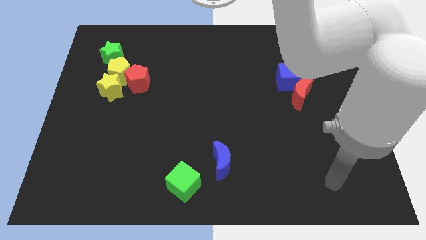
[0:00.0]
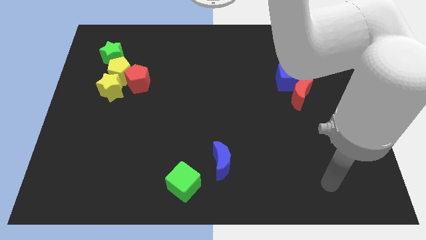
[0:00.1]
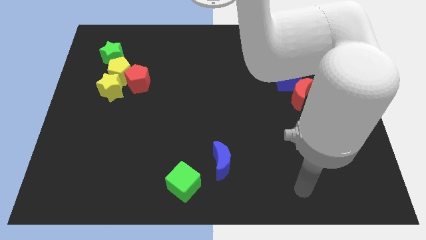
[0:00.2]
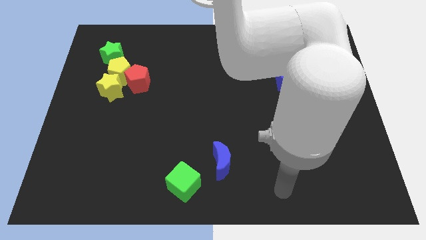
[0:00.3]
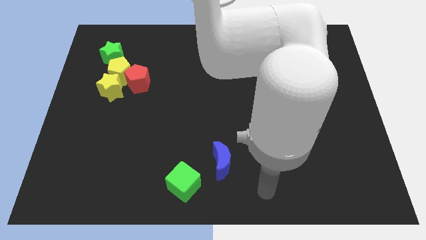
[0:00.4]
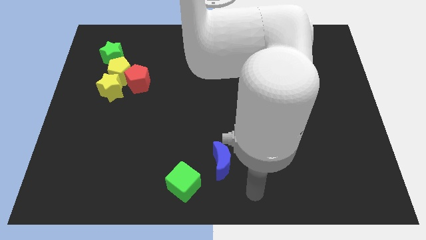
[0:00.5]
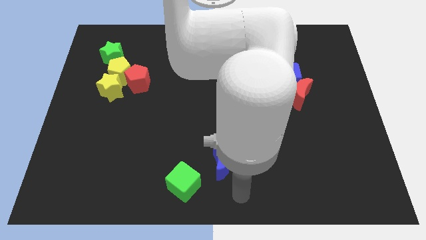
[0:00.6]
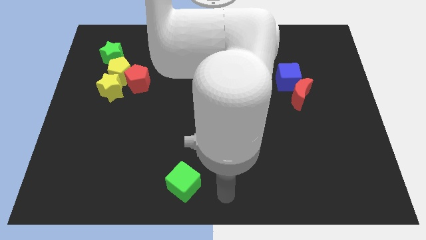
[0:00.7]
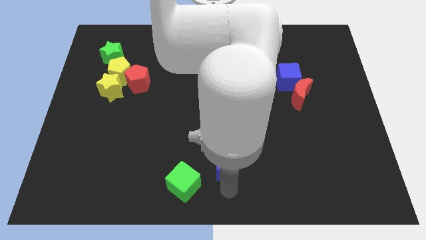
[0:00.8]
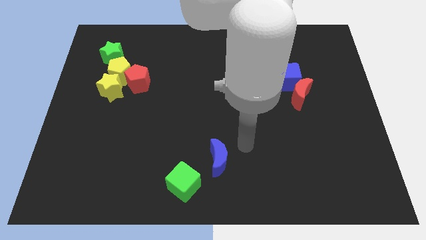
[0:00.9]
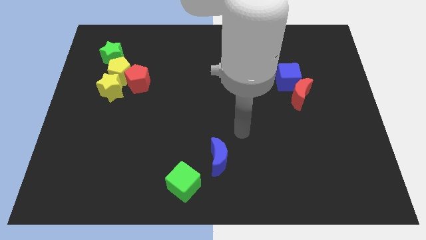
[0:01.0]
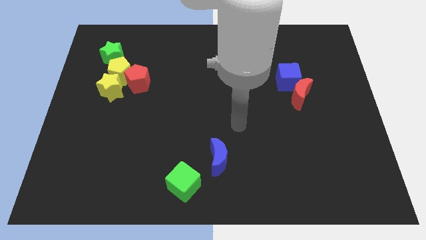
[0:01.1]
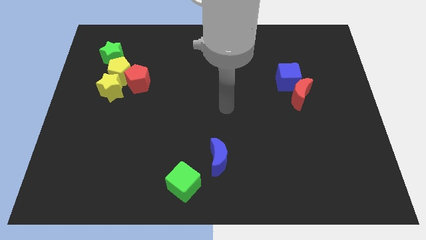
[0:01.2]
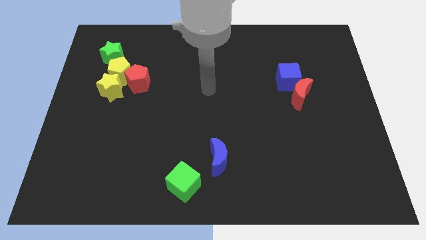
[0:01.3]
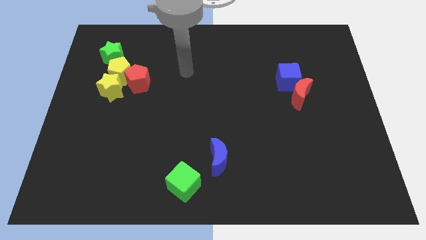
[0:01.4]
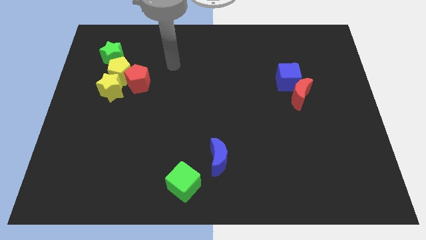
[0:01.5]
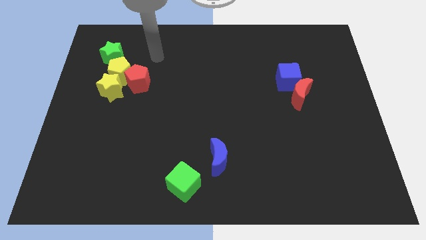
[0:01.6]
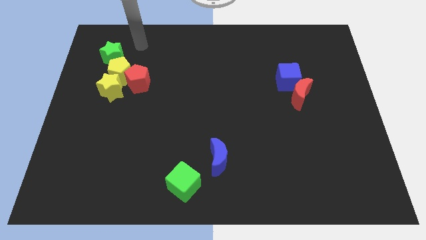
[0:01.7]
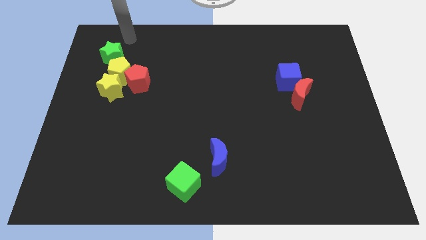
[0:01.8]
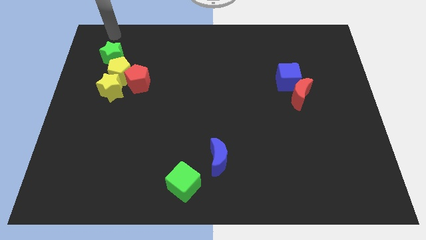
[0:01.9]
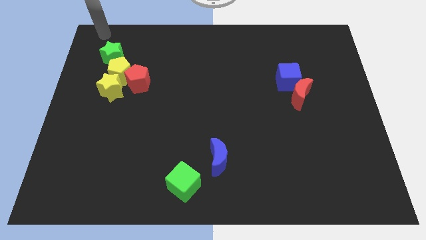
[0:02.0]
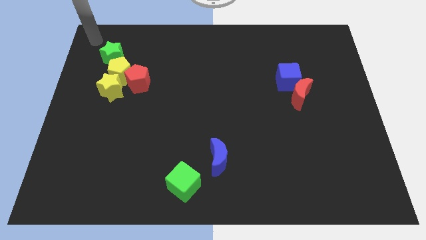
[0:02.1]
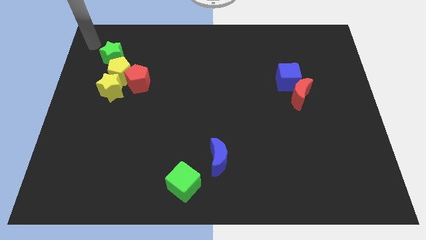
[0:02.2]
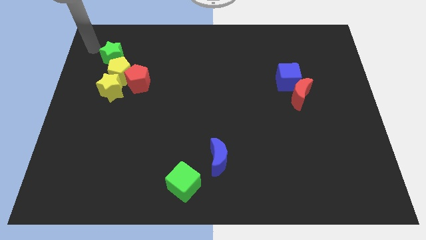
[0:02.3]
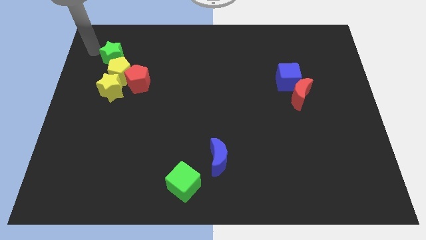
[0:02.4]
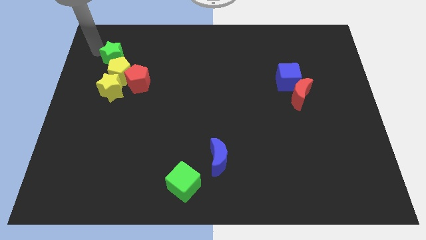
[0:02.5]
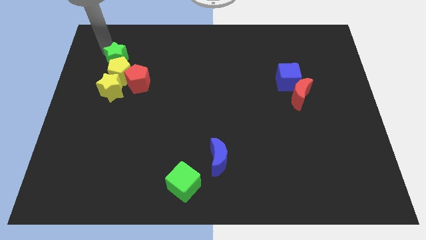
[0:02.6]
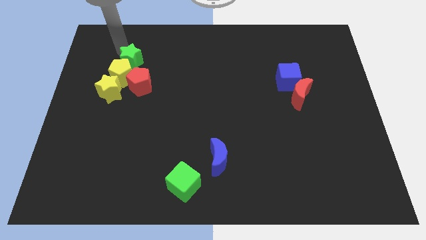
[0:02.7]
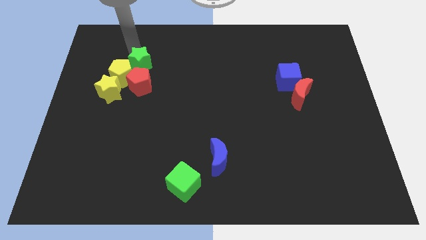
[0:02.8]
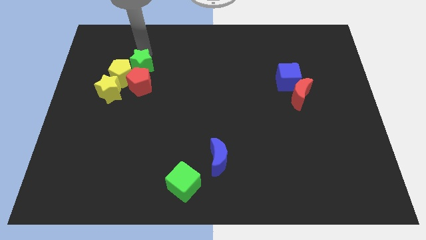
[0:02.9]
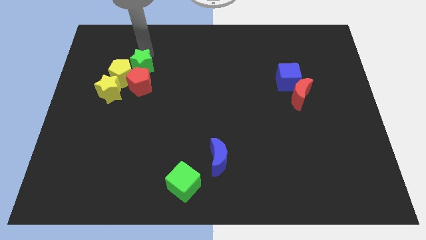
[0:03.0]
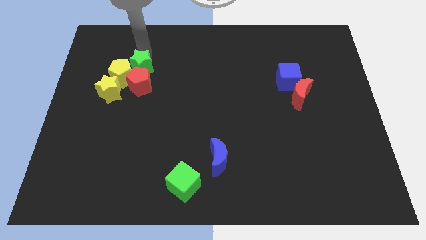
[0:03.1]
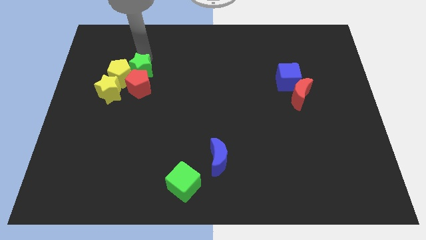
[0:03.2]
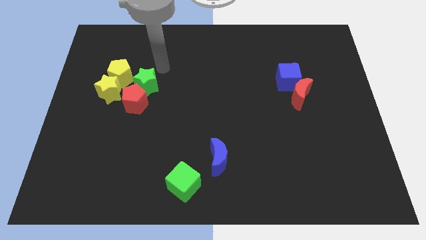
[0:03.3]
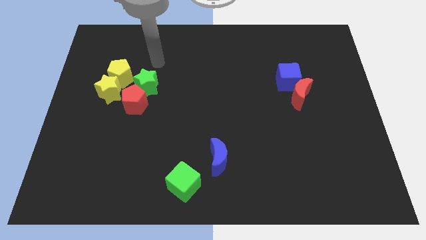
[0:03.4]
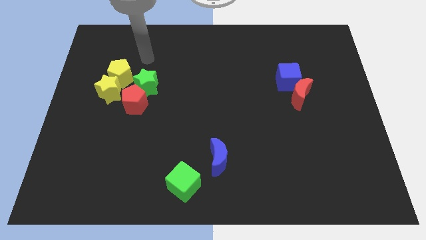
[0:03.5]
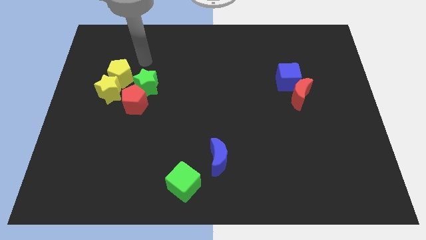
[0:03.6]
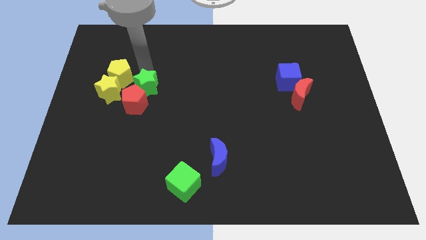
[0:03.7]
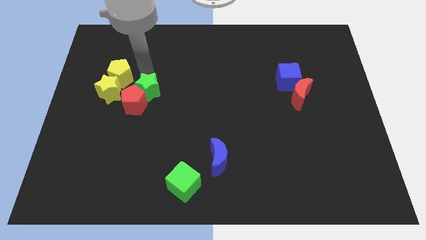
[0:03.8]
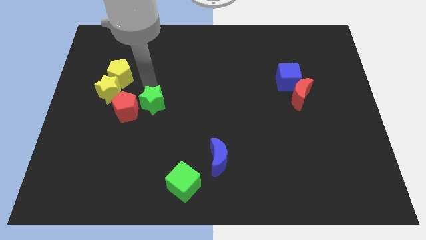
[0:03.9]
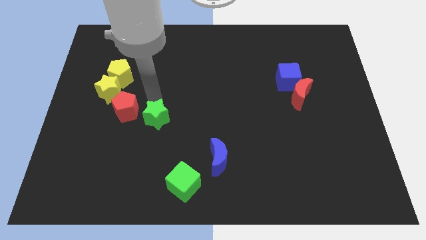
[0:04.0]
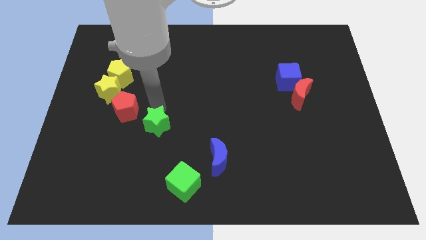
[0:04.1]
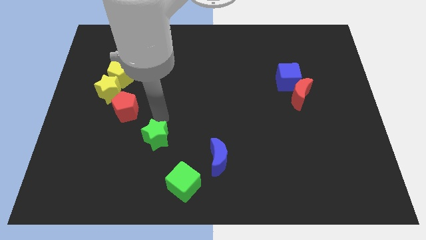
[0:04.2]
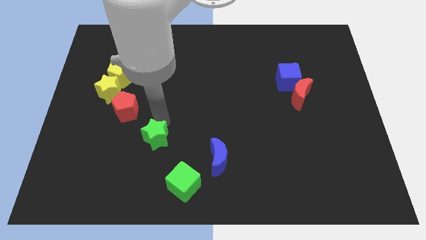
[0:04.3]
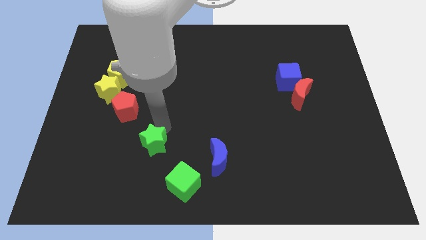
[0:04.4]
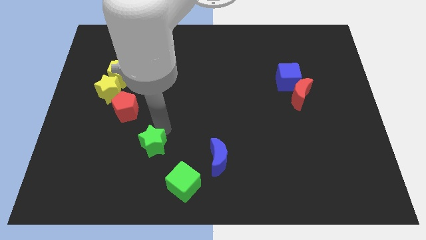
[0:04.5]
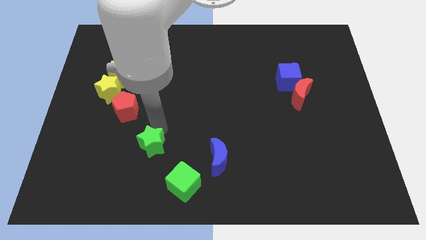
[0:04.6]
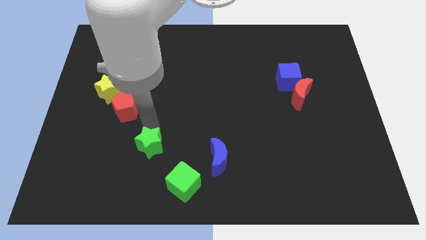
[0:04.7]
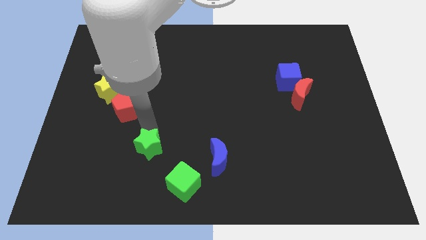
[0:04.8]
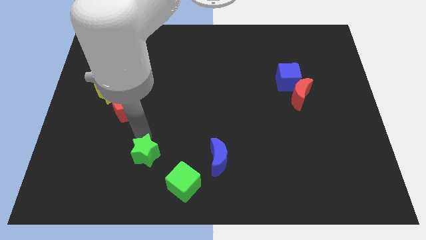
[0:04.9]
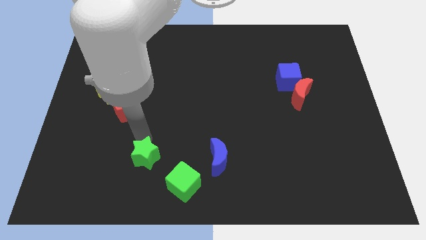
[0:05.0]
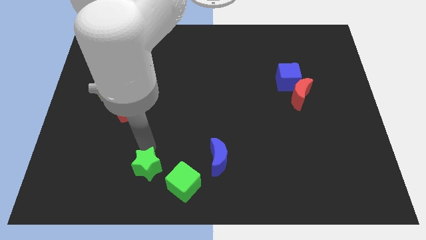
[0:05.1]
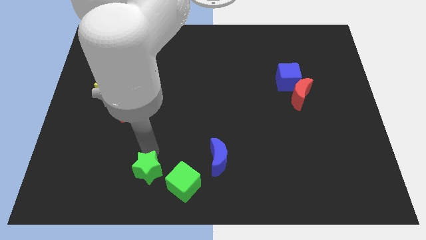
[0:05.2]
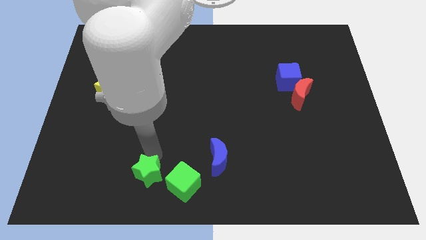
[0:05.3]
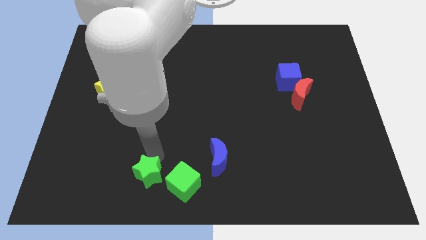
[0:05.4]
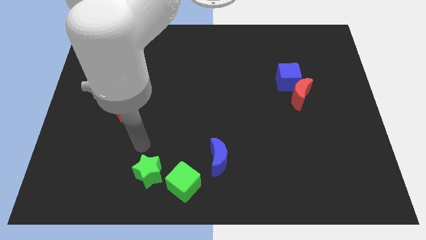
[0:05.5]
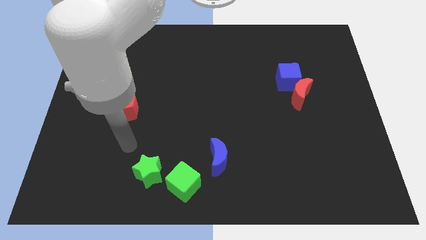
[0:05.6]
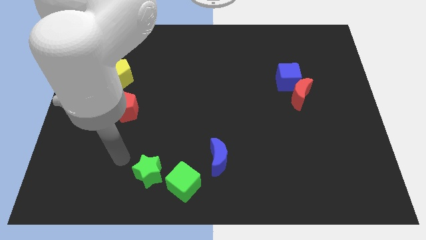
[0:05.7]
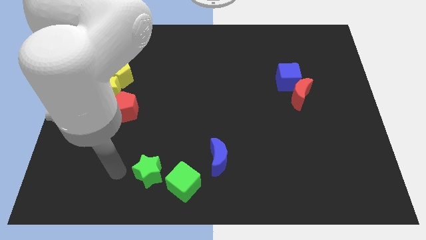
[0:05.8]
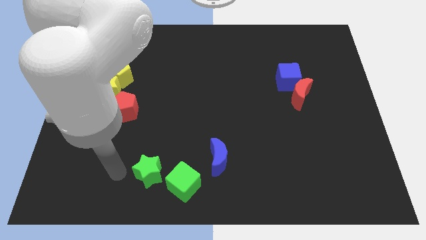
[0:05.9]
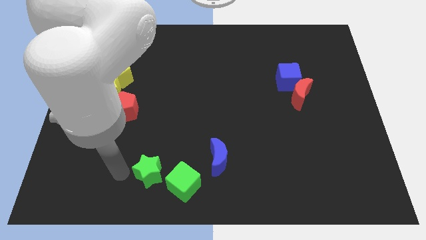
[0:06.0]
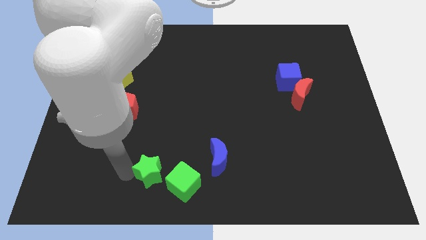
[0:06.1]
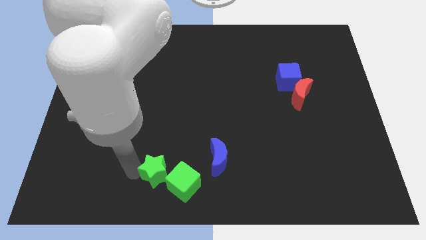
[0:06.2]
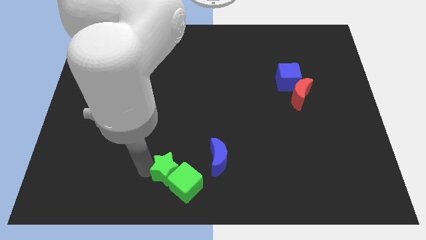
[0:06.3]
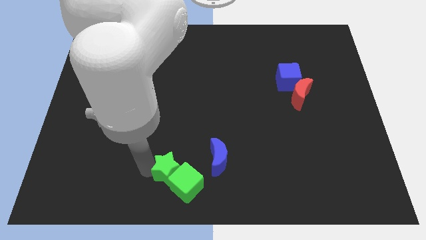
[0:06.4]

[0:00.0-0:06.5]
slide the green star close to the green cube

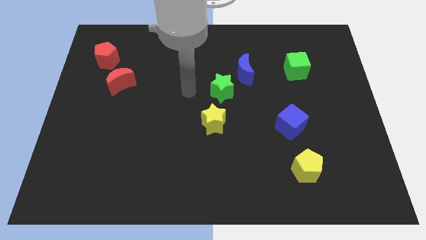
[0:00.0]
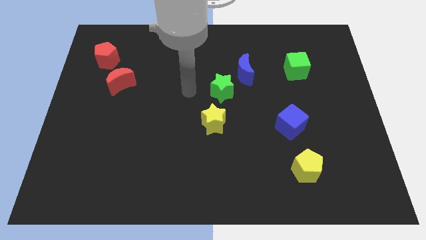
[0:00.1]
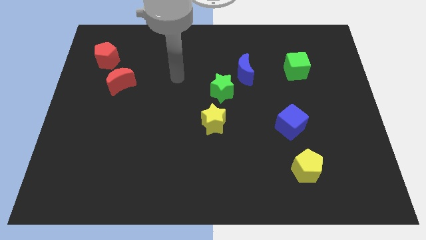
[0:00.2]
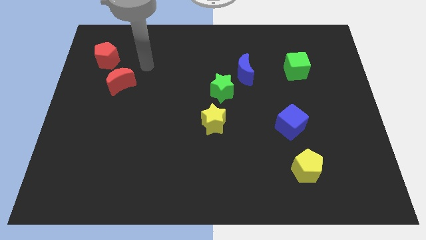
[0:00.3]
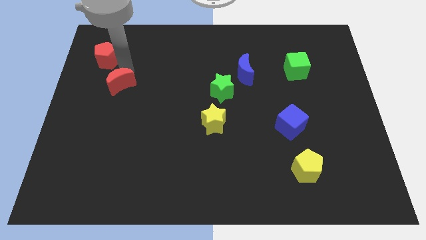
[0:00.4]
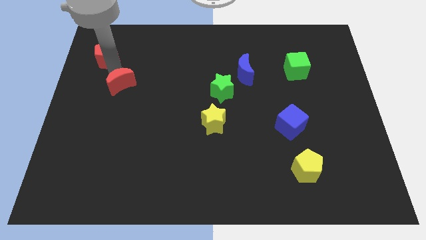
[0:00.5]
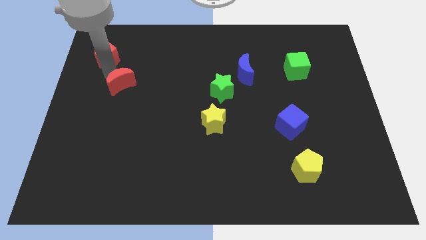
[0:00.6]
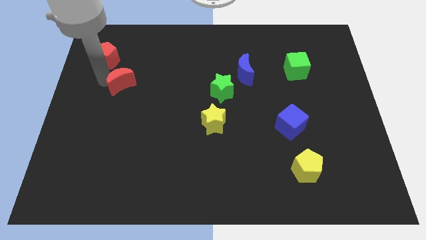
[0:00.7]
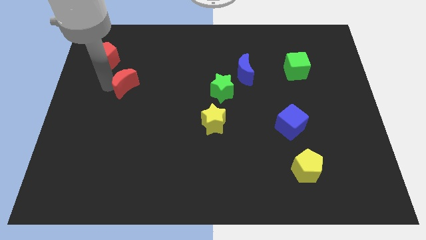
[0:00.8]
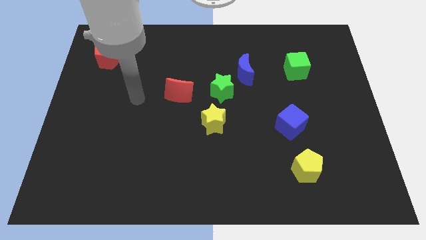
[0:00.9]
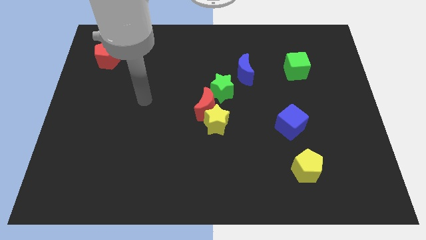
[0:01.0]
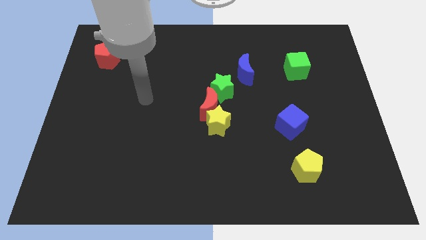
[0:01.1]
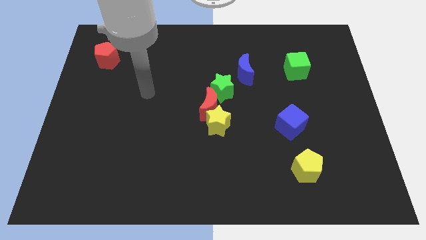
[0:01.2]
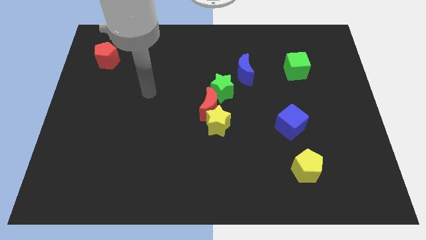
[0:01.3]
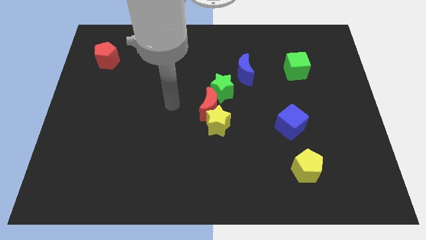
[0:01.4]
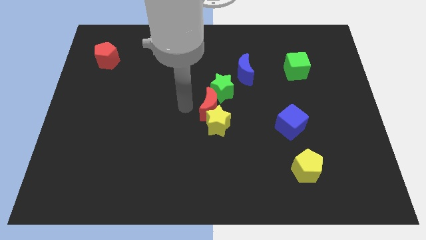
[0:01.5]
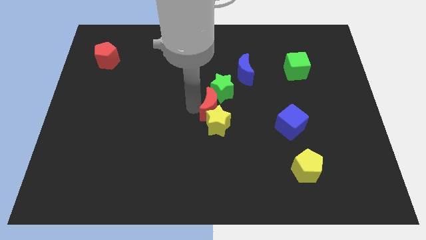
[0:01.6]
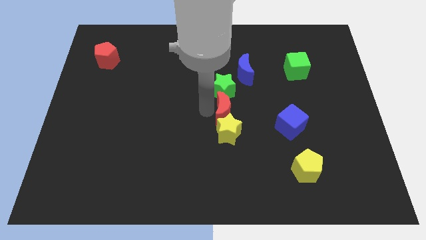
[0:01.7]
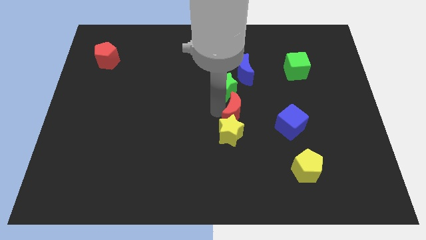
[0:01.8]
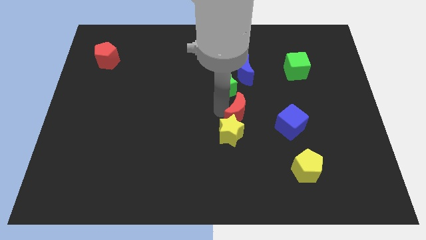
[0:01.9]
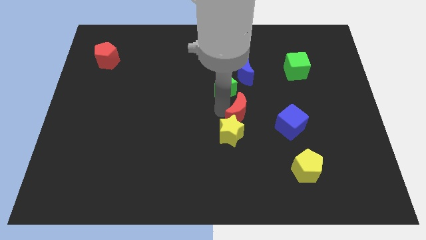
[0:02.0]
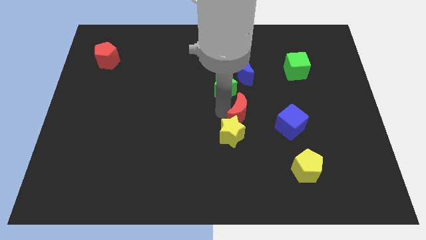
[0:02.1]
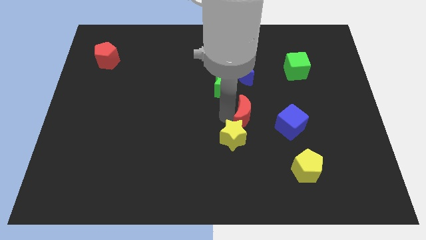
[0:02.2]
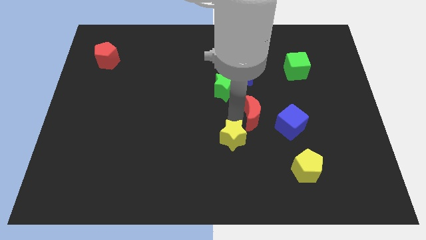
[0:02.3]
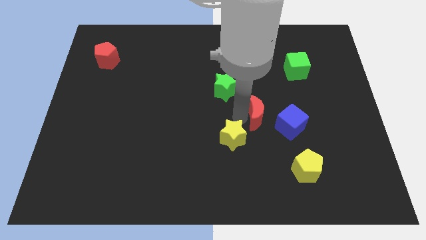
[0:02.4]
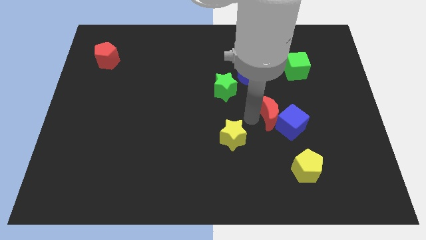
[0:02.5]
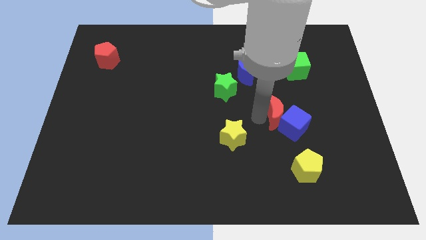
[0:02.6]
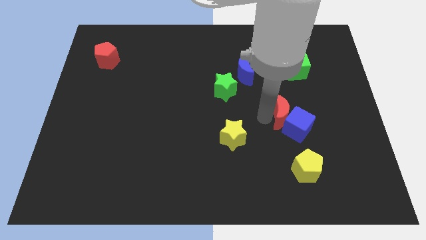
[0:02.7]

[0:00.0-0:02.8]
slide the red moon towards the blue cube
